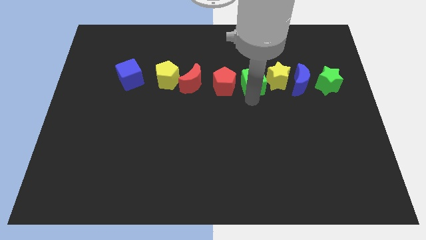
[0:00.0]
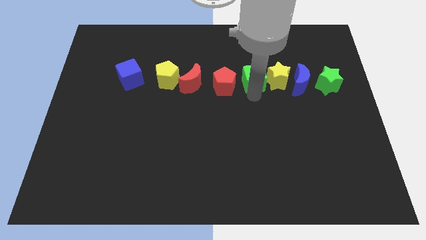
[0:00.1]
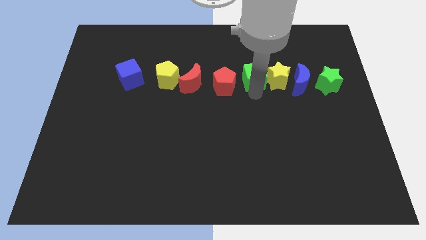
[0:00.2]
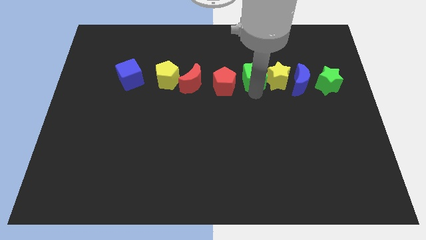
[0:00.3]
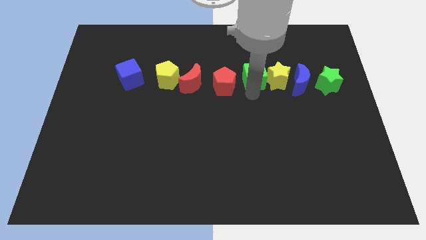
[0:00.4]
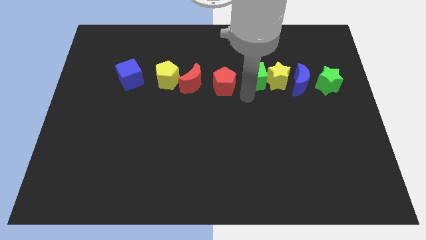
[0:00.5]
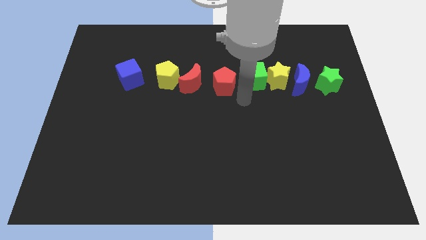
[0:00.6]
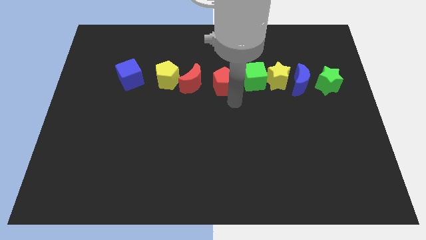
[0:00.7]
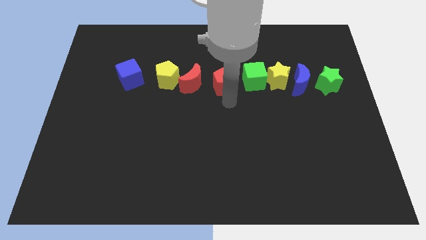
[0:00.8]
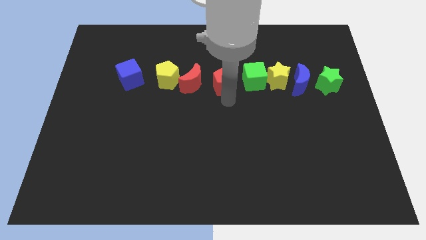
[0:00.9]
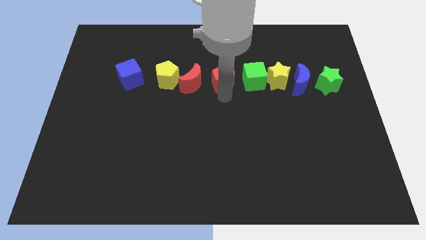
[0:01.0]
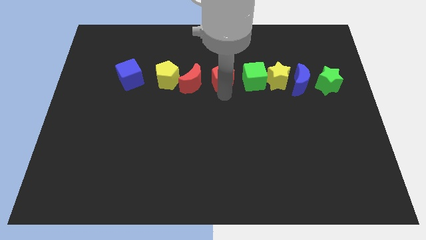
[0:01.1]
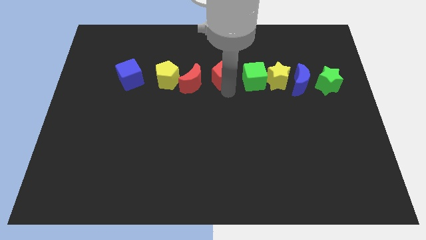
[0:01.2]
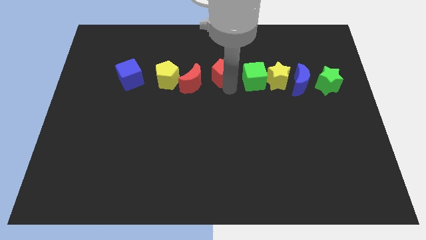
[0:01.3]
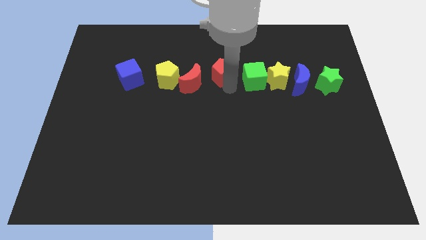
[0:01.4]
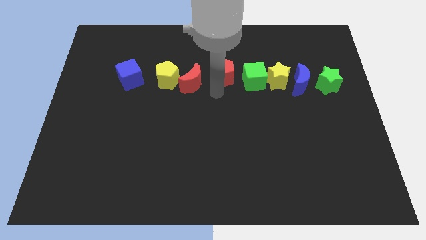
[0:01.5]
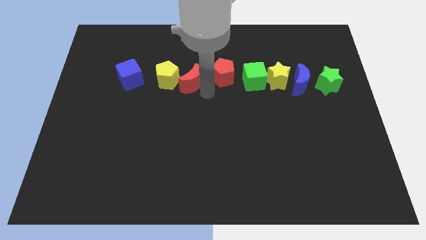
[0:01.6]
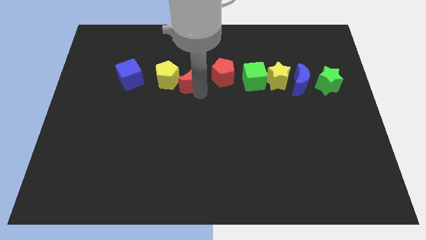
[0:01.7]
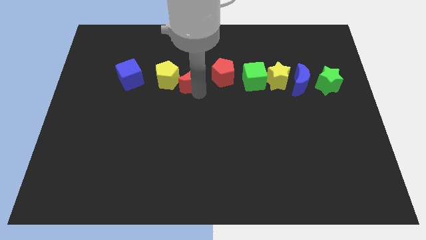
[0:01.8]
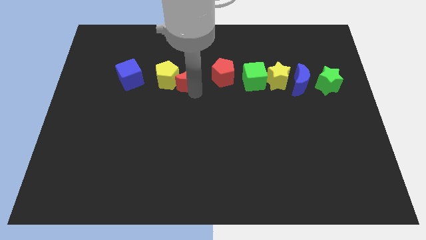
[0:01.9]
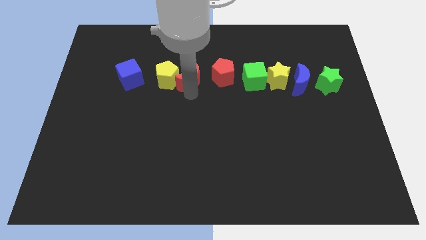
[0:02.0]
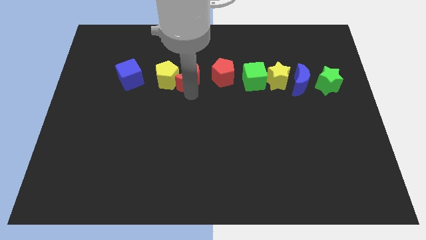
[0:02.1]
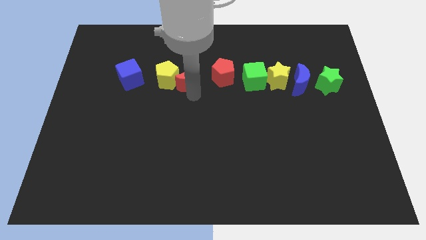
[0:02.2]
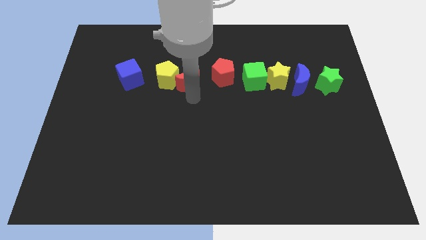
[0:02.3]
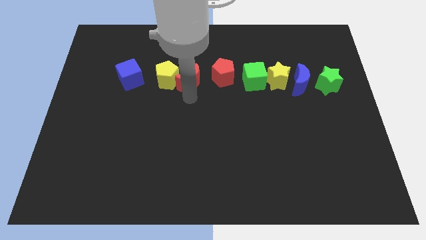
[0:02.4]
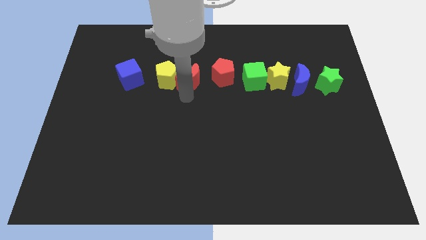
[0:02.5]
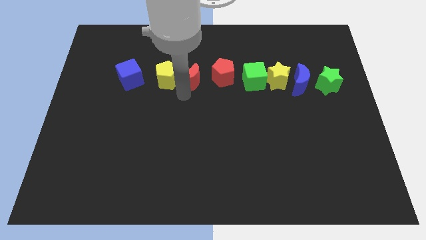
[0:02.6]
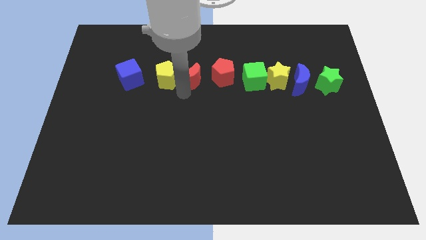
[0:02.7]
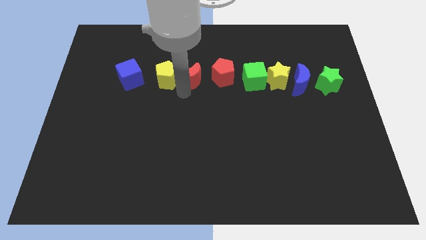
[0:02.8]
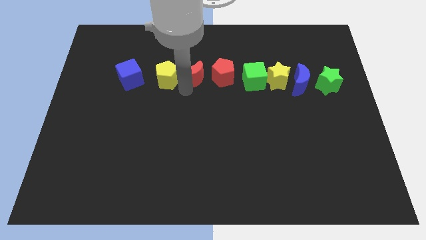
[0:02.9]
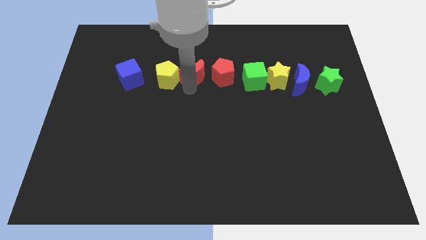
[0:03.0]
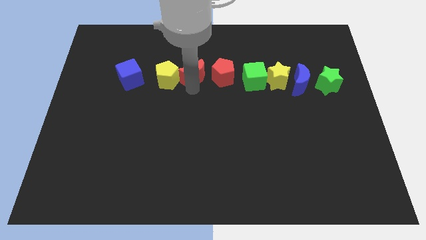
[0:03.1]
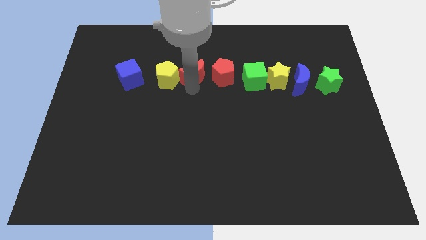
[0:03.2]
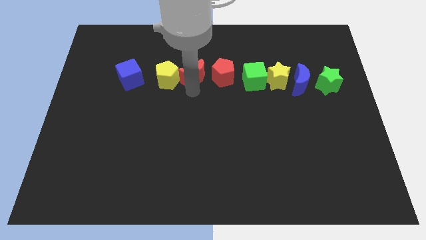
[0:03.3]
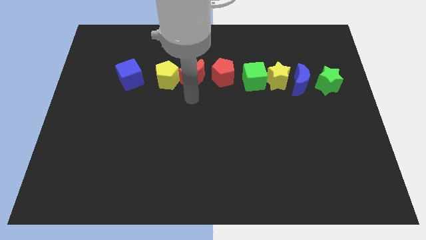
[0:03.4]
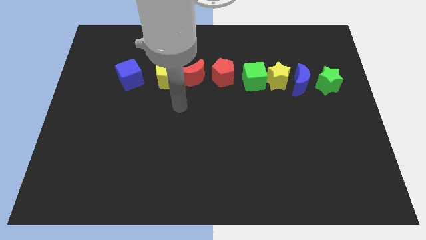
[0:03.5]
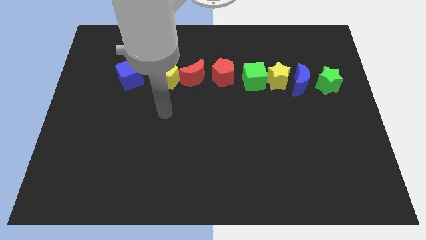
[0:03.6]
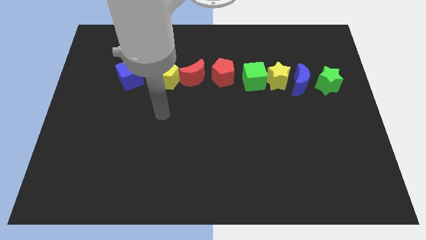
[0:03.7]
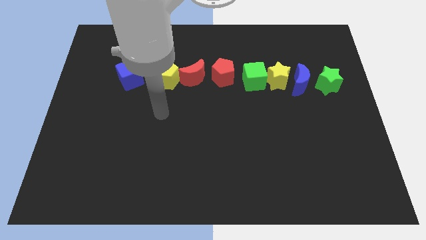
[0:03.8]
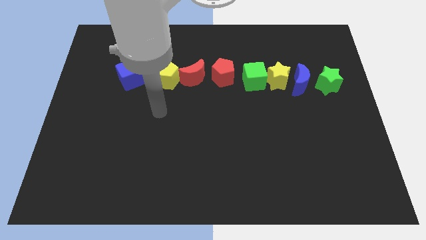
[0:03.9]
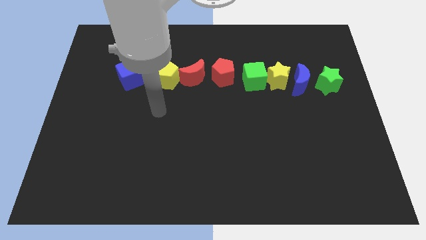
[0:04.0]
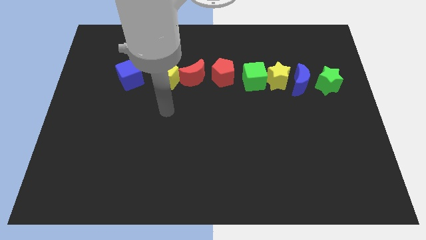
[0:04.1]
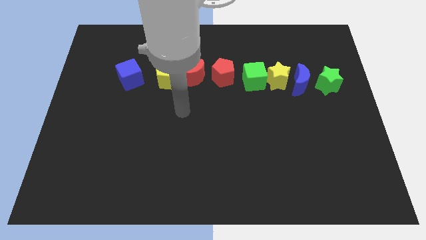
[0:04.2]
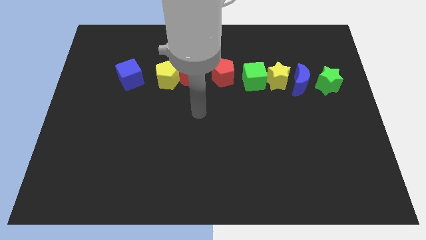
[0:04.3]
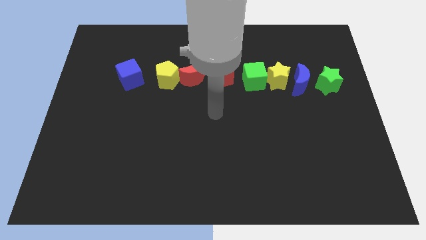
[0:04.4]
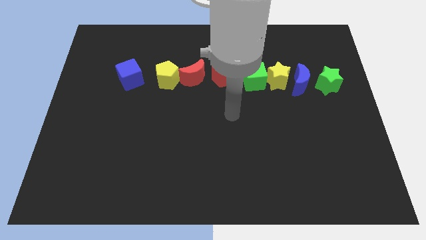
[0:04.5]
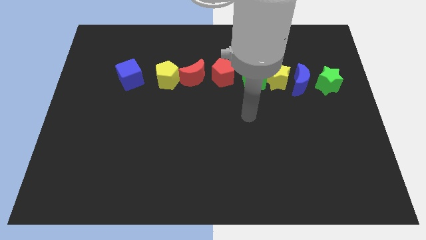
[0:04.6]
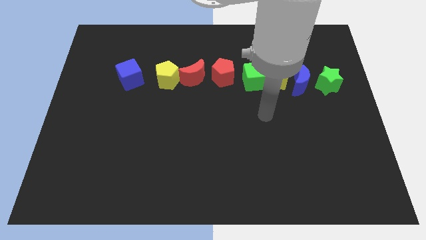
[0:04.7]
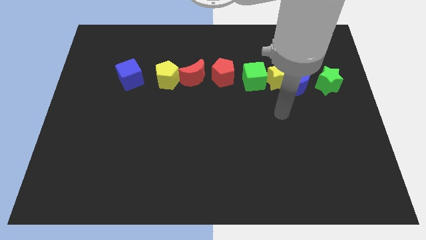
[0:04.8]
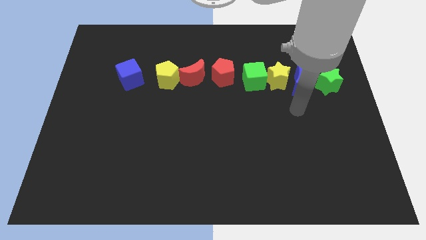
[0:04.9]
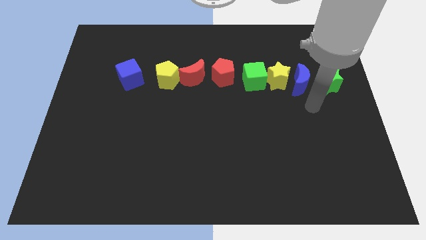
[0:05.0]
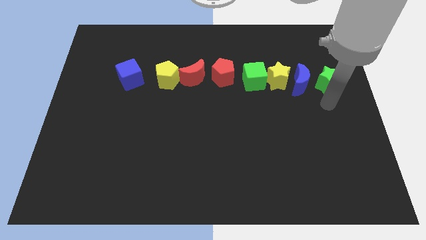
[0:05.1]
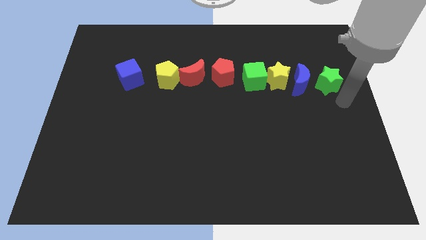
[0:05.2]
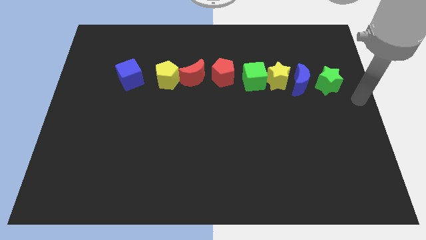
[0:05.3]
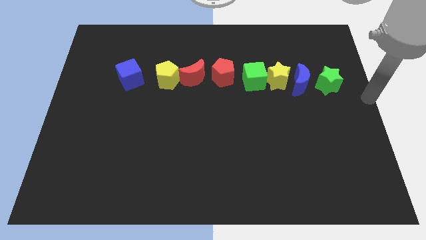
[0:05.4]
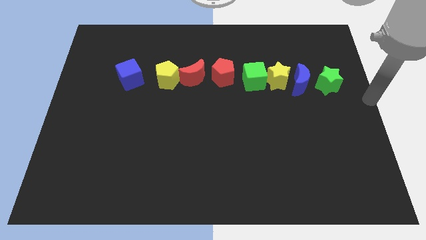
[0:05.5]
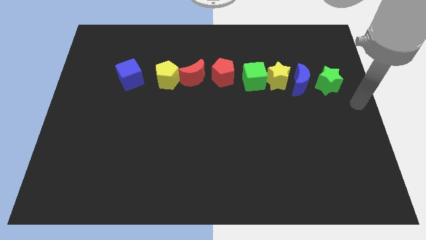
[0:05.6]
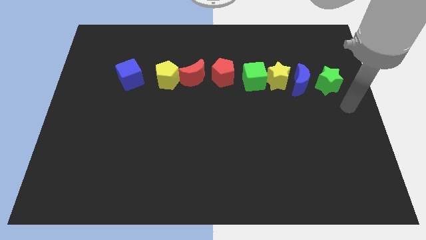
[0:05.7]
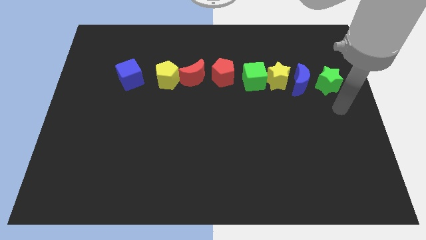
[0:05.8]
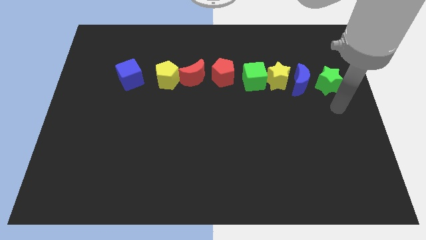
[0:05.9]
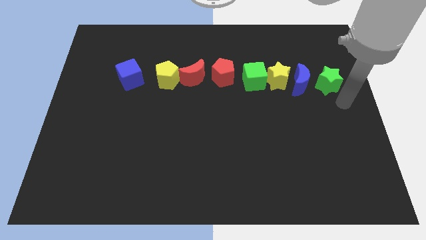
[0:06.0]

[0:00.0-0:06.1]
adjust all the blocks in a horizontal line

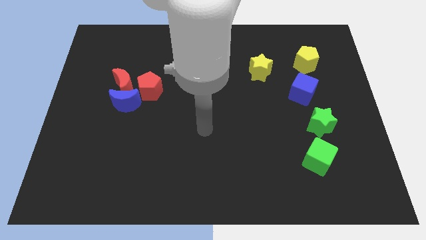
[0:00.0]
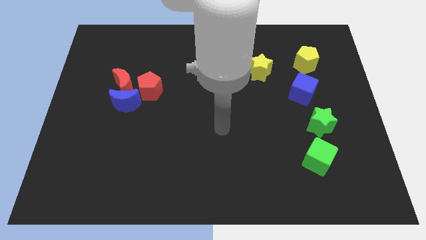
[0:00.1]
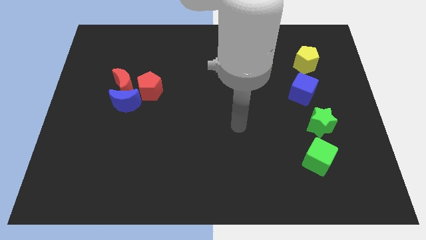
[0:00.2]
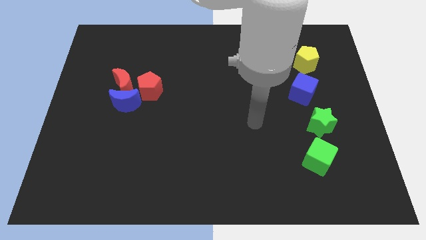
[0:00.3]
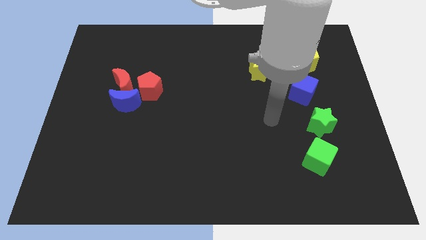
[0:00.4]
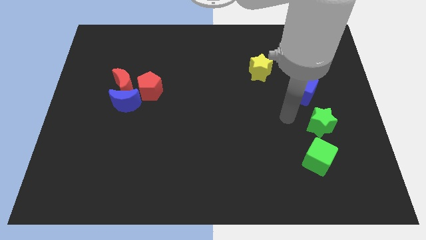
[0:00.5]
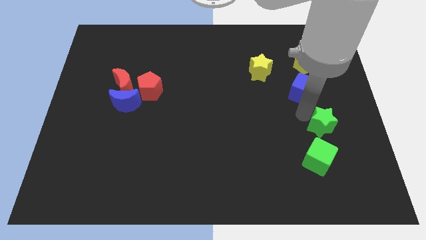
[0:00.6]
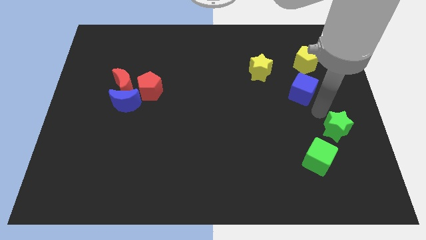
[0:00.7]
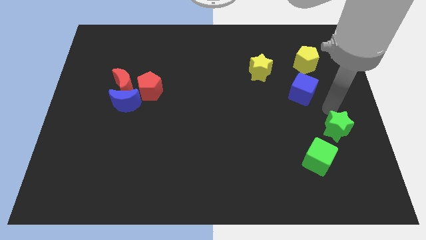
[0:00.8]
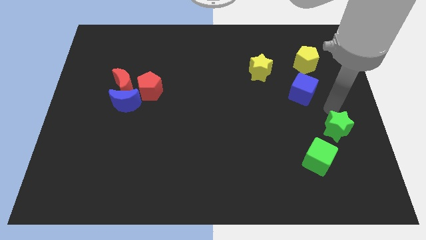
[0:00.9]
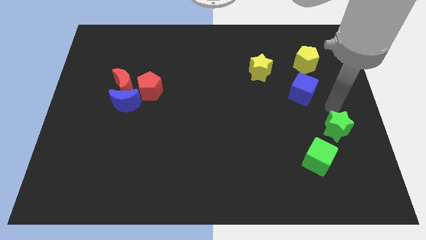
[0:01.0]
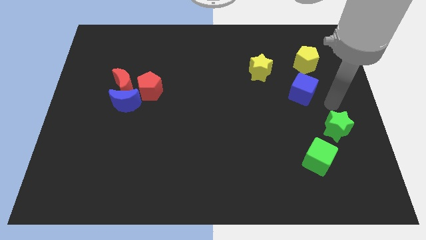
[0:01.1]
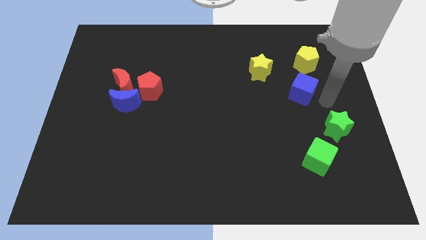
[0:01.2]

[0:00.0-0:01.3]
move the green star away from the green cube

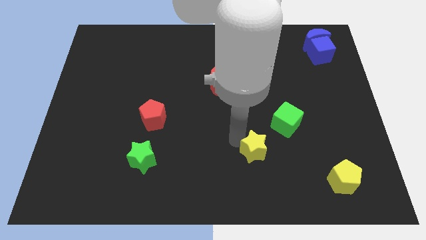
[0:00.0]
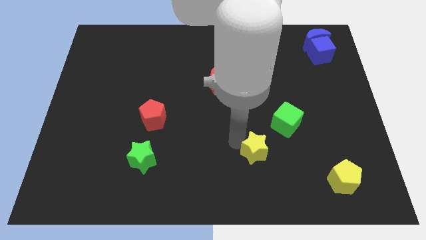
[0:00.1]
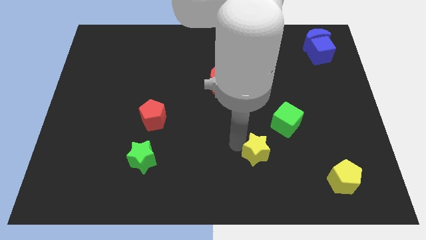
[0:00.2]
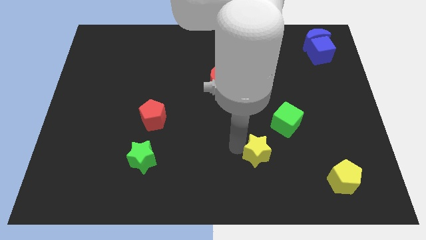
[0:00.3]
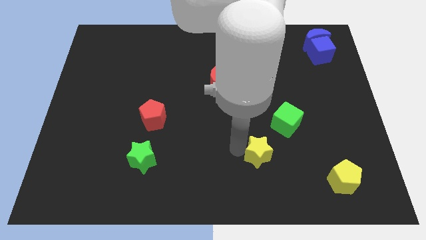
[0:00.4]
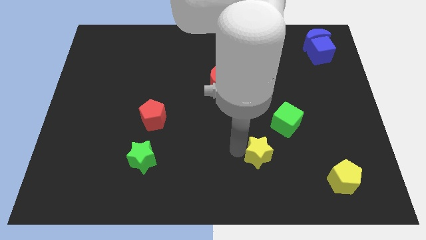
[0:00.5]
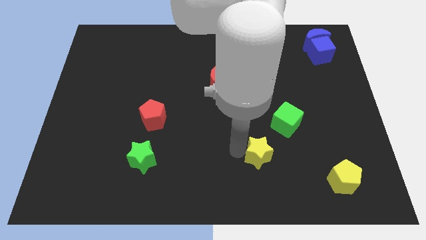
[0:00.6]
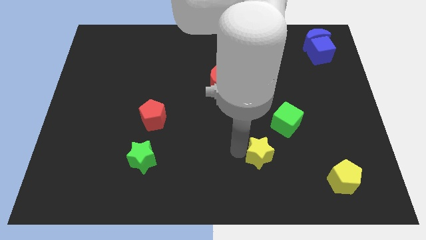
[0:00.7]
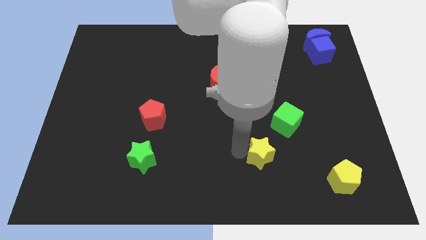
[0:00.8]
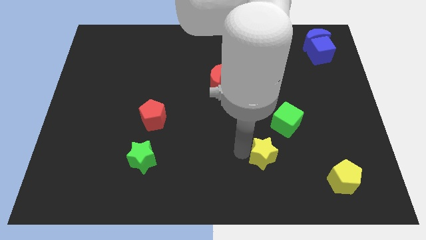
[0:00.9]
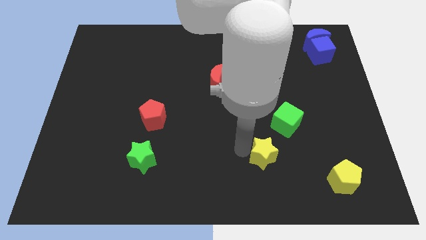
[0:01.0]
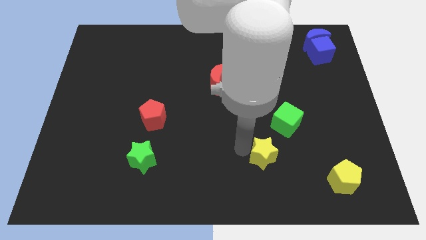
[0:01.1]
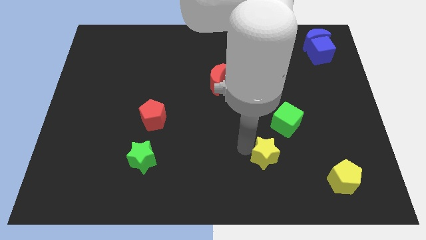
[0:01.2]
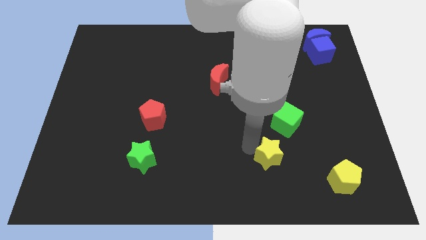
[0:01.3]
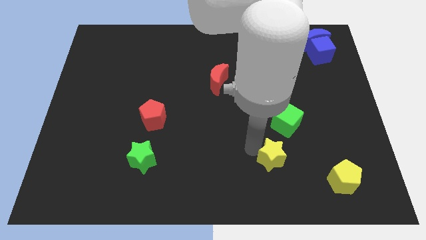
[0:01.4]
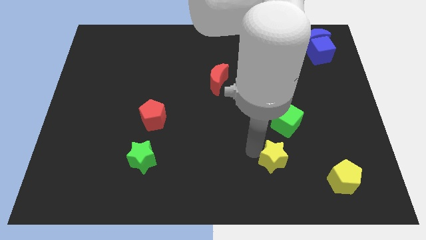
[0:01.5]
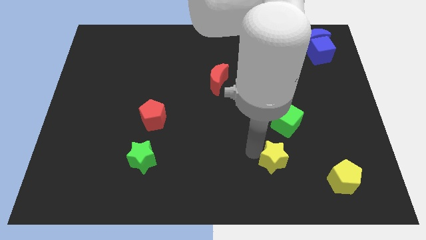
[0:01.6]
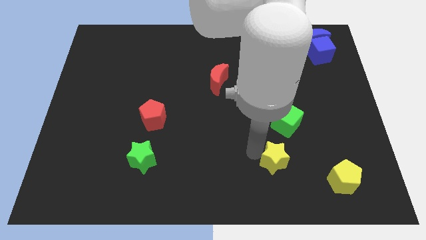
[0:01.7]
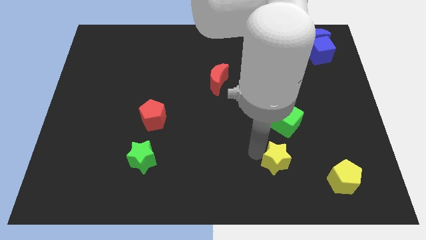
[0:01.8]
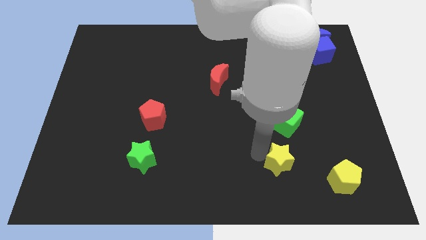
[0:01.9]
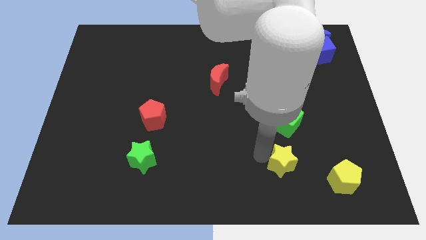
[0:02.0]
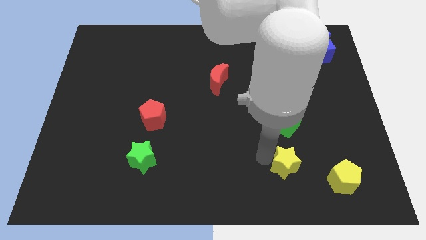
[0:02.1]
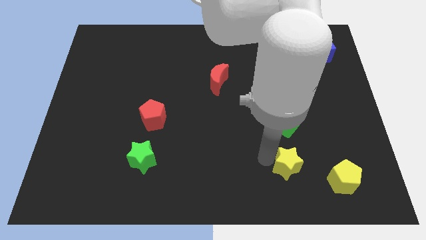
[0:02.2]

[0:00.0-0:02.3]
move the yellow star to the bottom of the green cube
